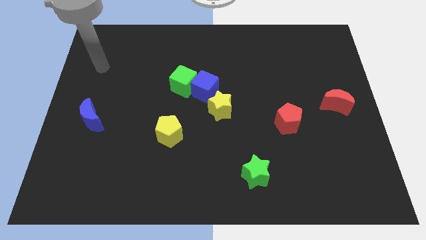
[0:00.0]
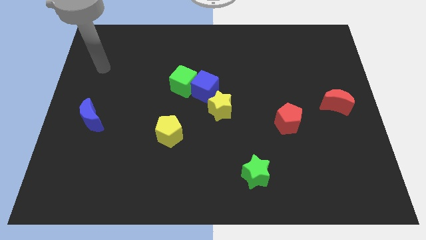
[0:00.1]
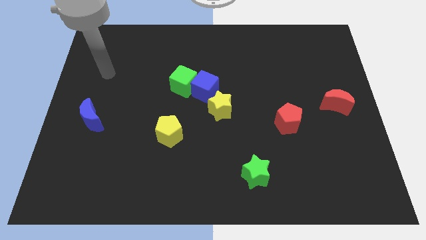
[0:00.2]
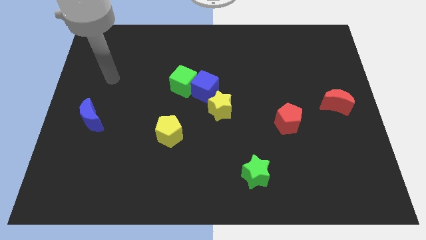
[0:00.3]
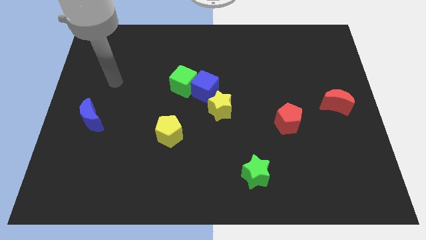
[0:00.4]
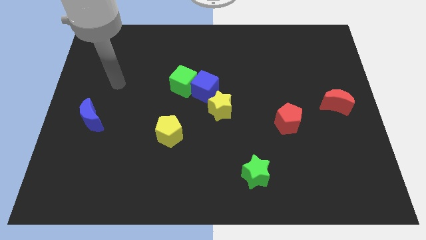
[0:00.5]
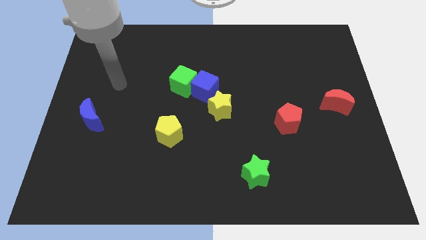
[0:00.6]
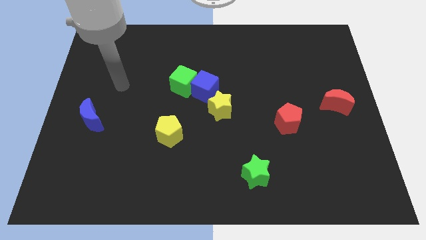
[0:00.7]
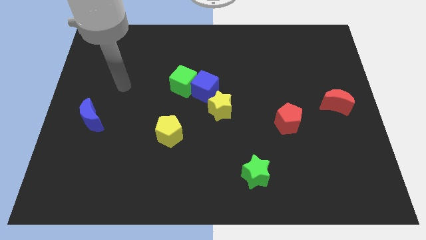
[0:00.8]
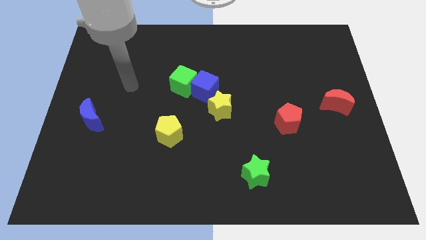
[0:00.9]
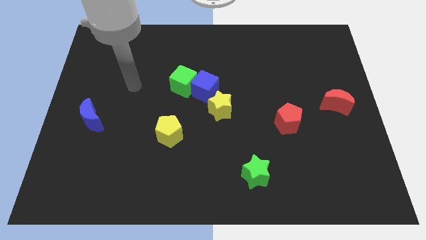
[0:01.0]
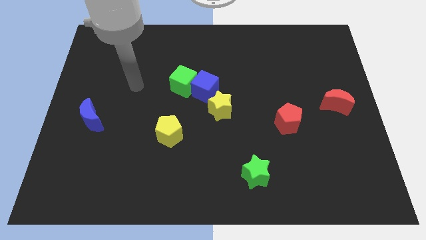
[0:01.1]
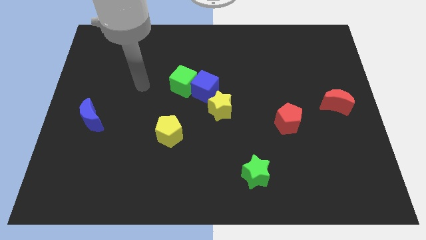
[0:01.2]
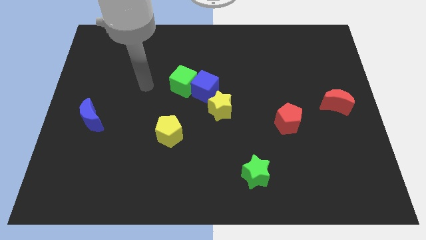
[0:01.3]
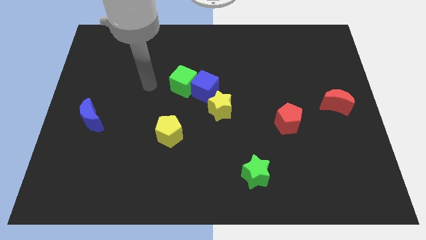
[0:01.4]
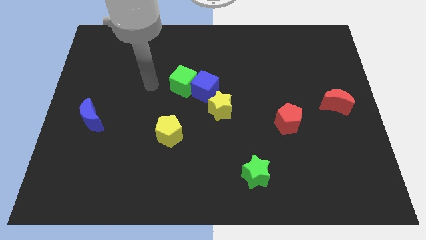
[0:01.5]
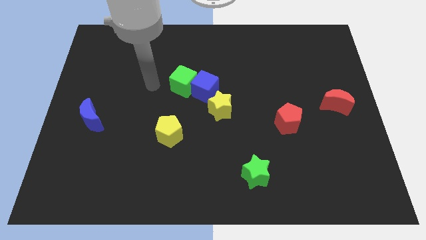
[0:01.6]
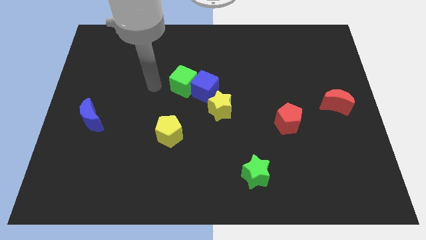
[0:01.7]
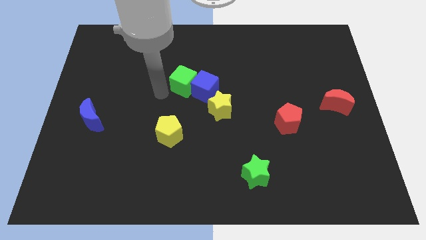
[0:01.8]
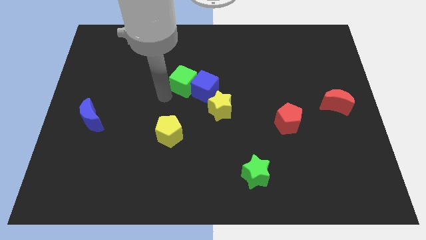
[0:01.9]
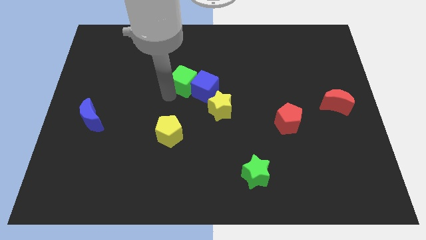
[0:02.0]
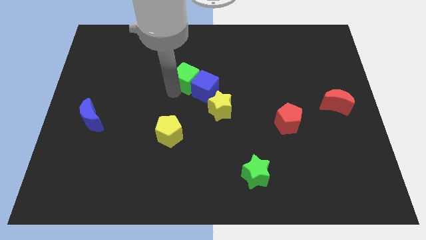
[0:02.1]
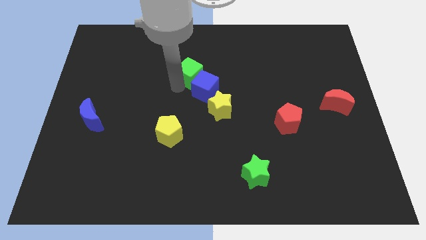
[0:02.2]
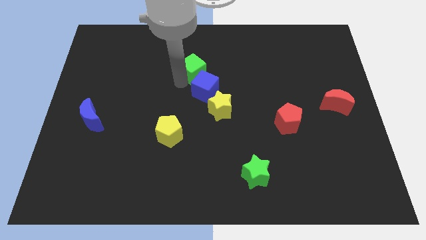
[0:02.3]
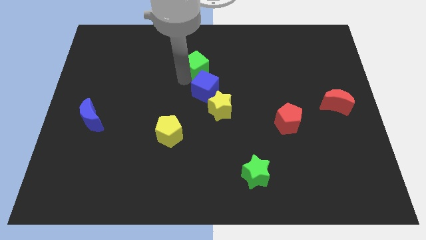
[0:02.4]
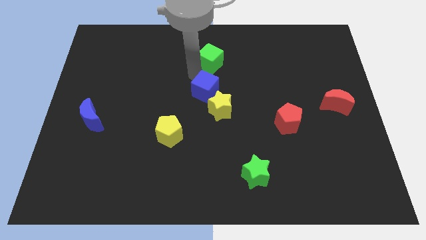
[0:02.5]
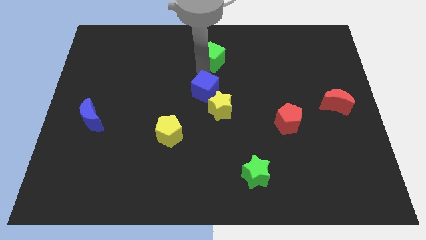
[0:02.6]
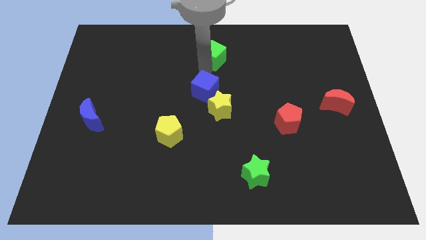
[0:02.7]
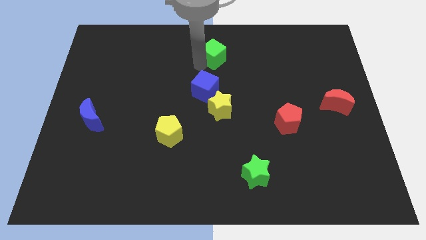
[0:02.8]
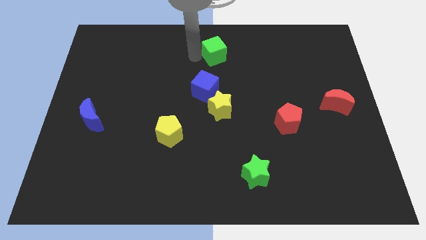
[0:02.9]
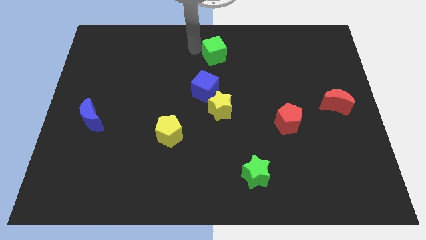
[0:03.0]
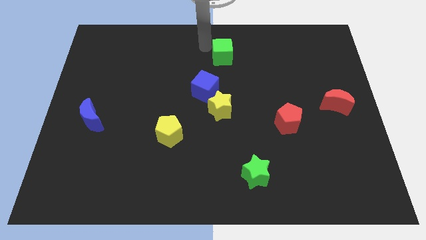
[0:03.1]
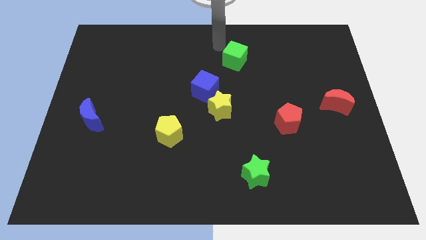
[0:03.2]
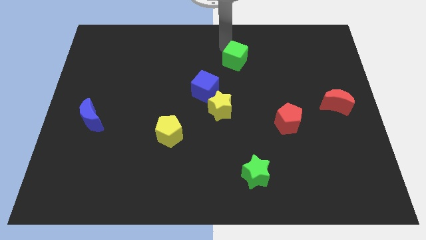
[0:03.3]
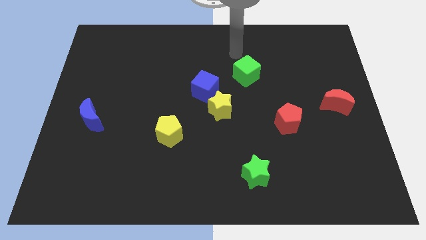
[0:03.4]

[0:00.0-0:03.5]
separate green cube from blue cube

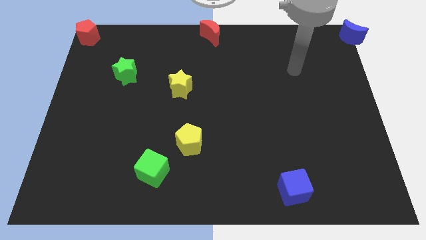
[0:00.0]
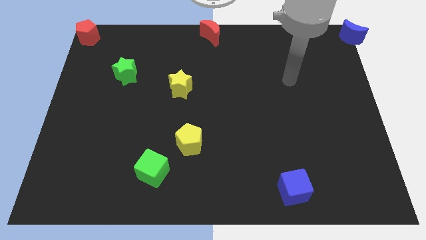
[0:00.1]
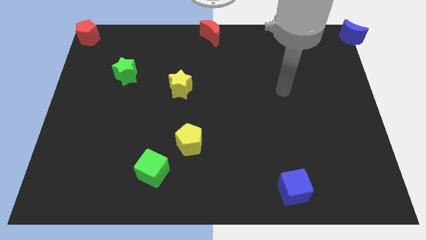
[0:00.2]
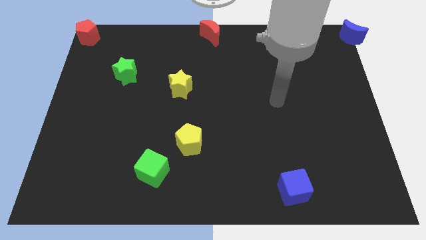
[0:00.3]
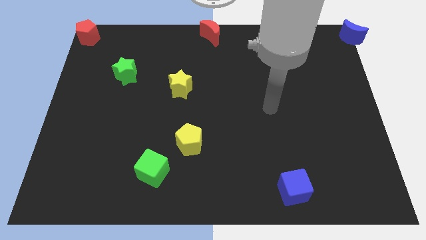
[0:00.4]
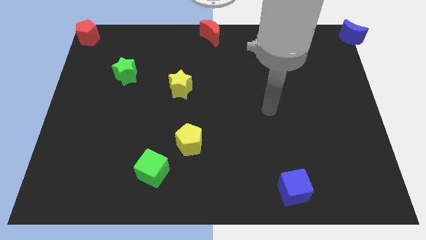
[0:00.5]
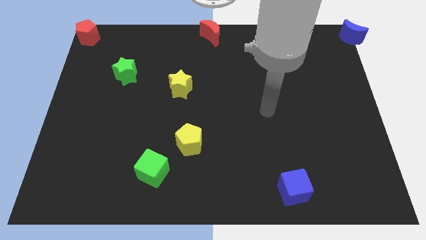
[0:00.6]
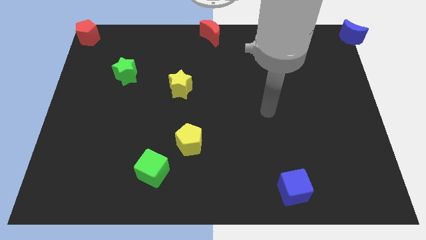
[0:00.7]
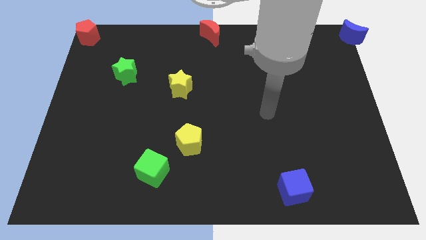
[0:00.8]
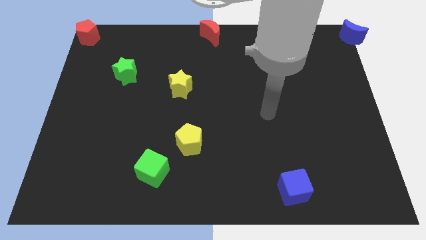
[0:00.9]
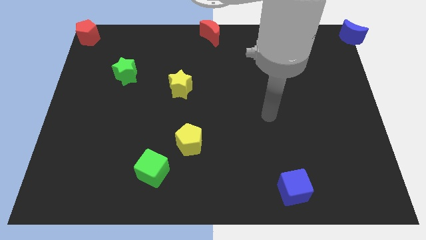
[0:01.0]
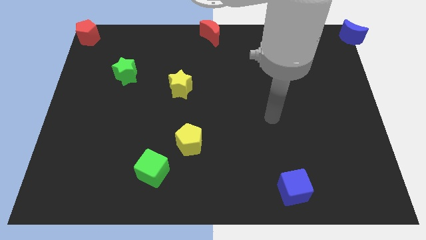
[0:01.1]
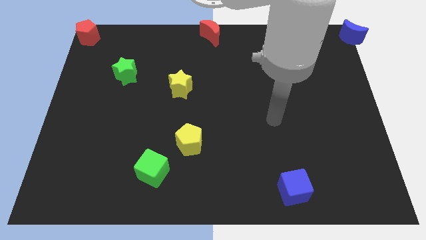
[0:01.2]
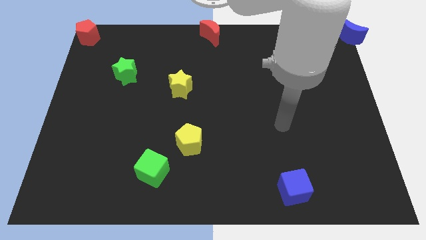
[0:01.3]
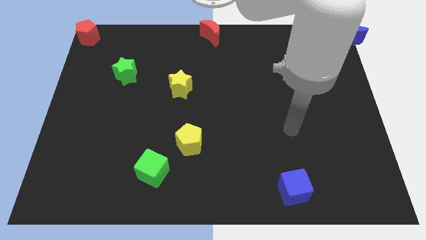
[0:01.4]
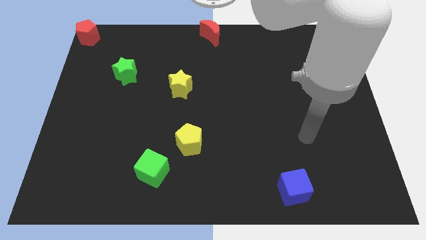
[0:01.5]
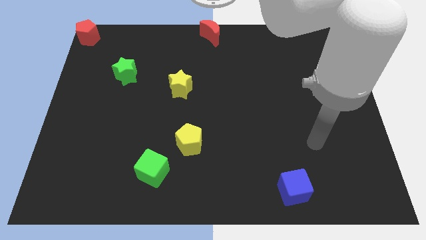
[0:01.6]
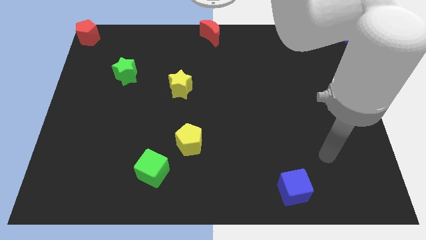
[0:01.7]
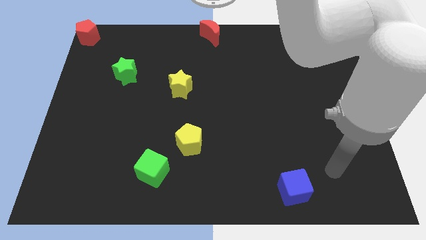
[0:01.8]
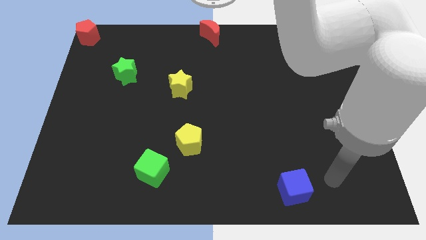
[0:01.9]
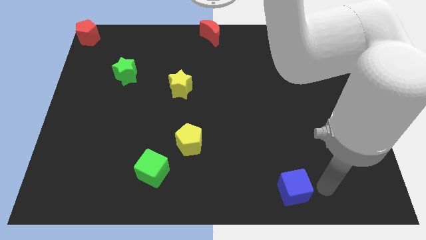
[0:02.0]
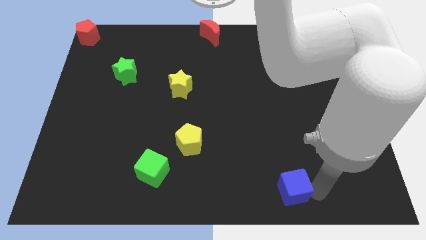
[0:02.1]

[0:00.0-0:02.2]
point your arm at the right side of the blue cube

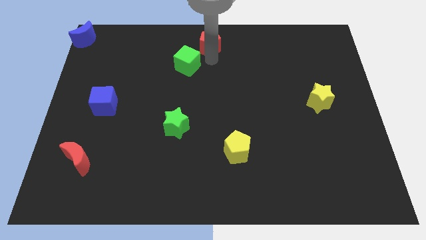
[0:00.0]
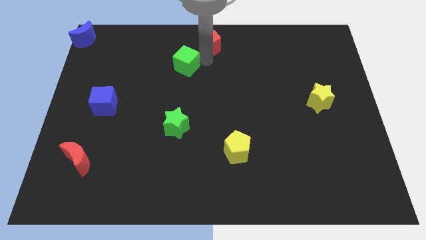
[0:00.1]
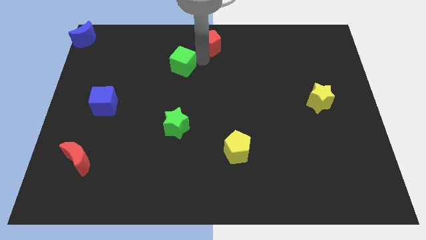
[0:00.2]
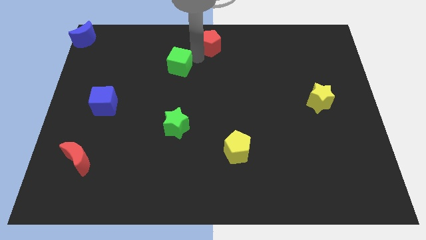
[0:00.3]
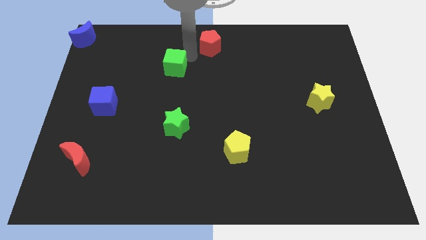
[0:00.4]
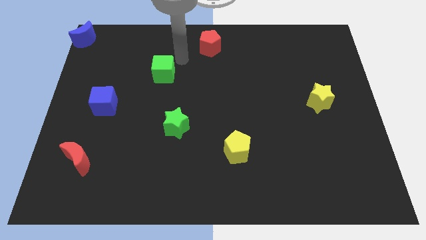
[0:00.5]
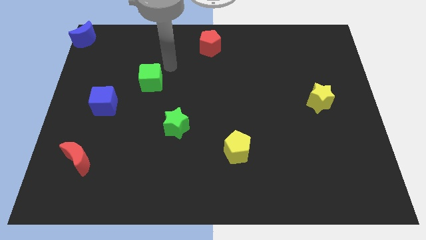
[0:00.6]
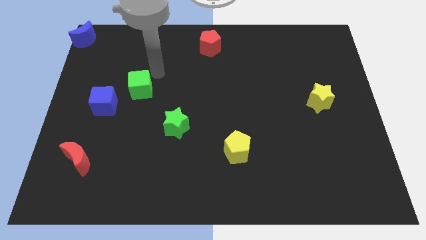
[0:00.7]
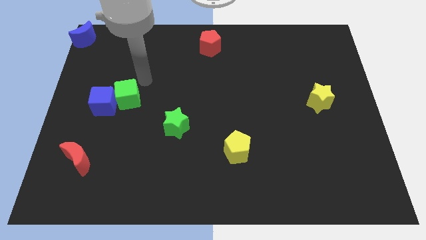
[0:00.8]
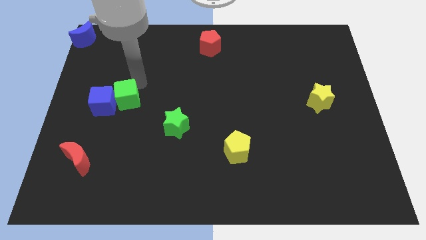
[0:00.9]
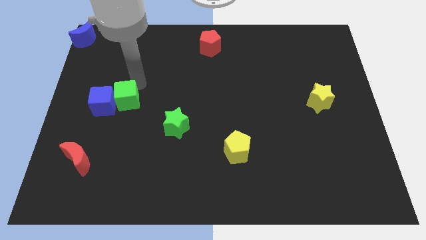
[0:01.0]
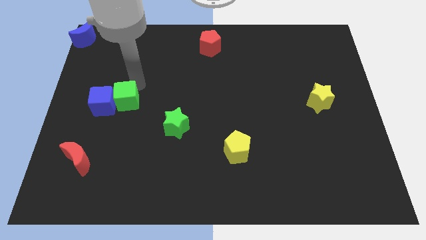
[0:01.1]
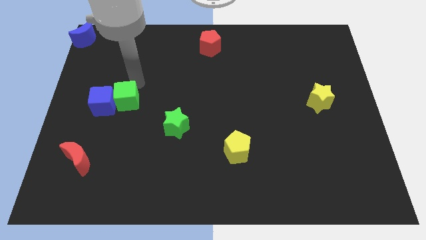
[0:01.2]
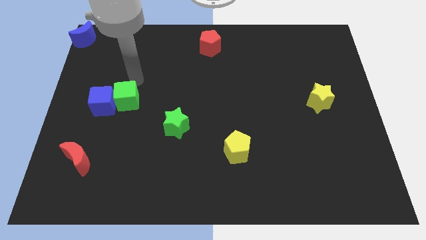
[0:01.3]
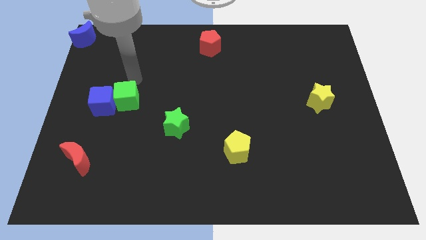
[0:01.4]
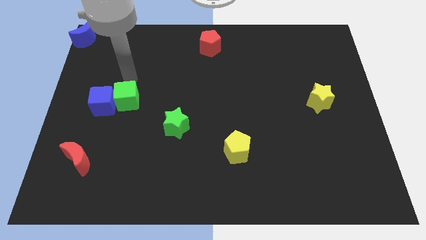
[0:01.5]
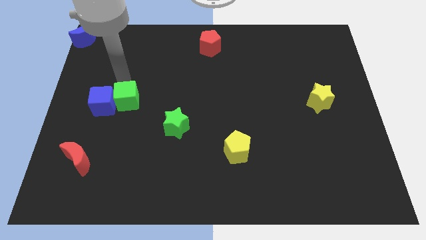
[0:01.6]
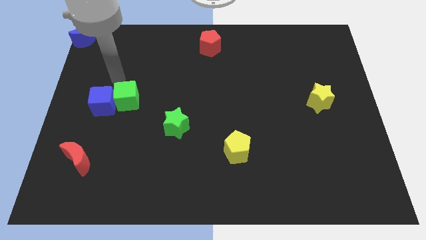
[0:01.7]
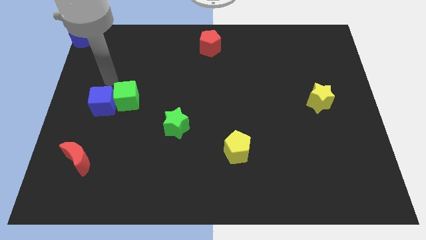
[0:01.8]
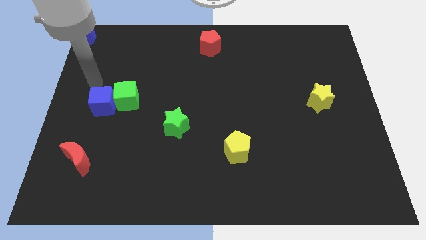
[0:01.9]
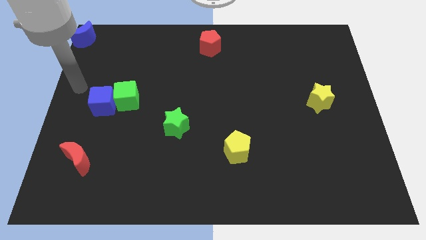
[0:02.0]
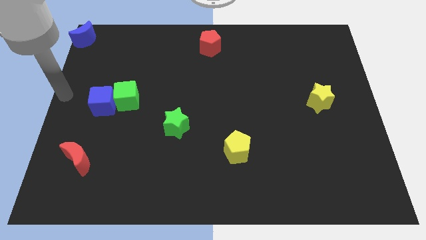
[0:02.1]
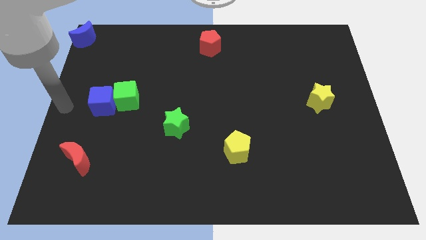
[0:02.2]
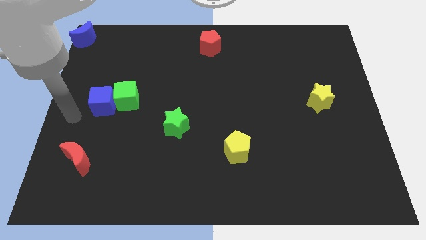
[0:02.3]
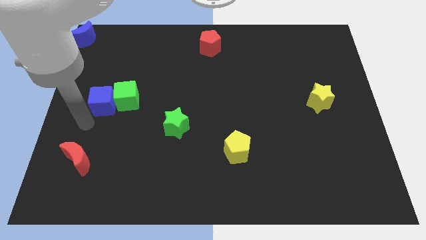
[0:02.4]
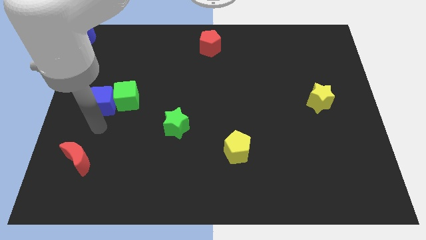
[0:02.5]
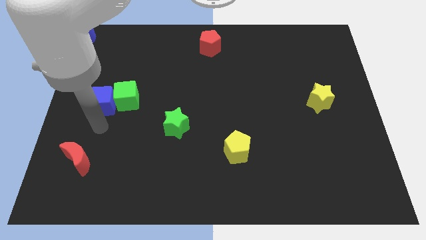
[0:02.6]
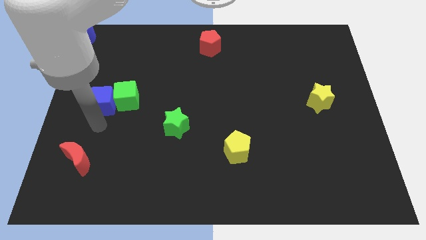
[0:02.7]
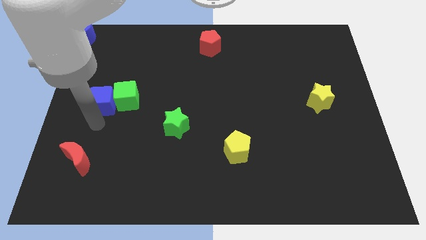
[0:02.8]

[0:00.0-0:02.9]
place the green cube to the right of the blue cube

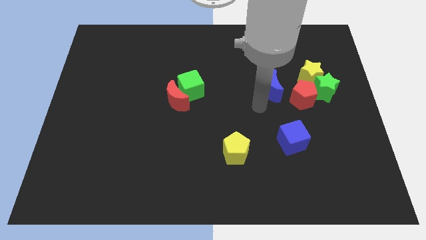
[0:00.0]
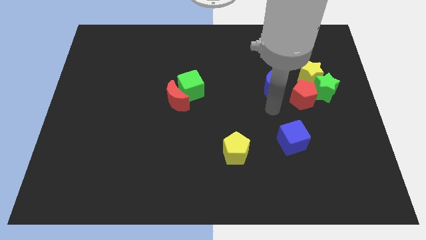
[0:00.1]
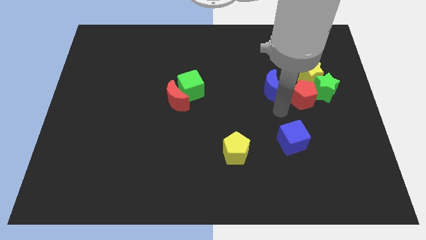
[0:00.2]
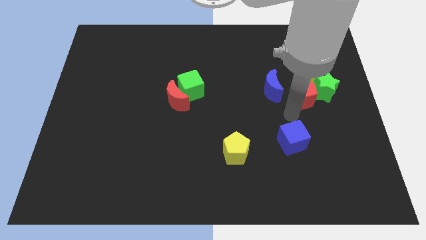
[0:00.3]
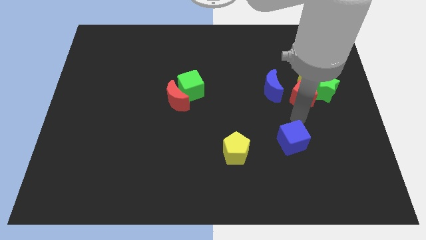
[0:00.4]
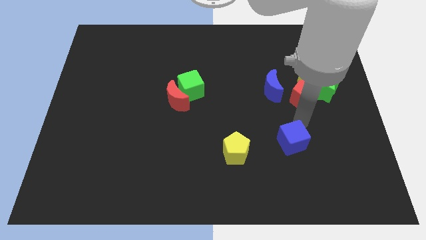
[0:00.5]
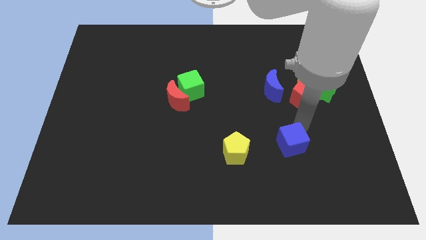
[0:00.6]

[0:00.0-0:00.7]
place the arm near the blue cube
